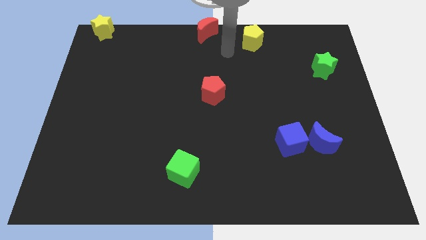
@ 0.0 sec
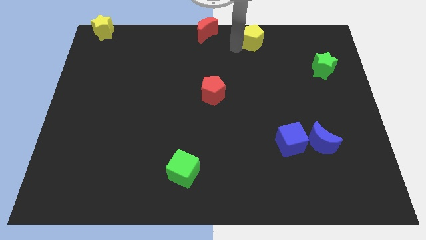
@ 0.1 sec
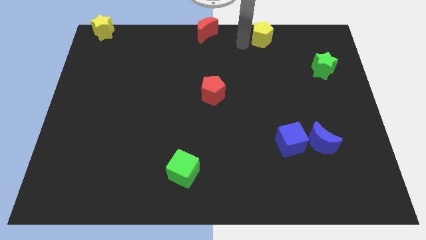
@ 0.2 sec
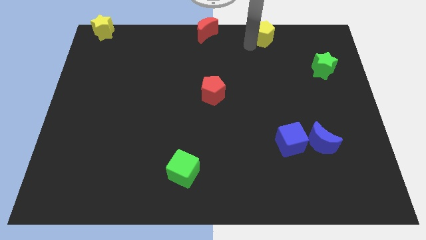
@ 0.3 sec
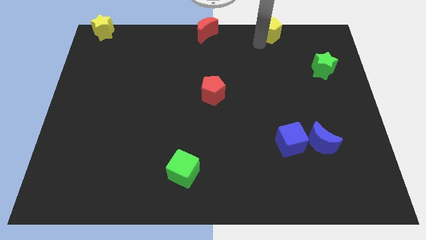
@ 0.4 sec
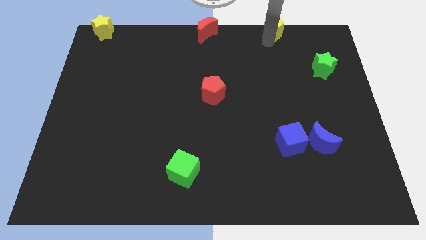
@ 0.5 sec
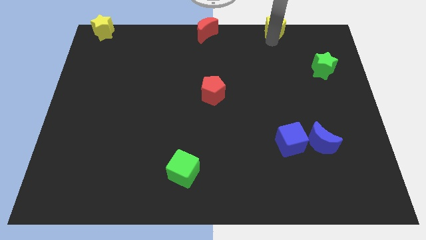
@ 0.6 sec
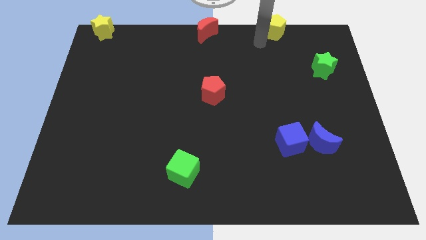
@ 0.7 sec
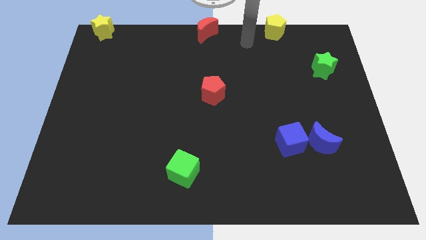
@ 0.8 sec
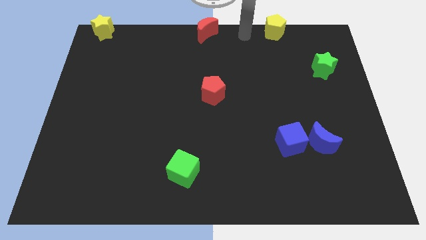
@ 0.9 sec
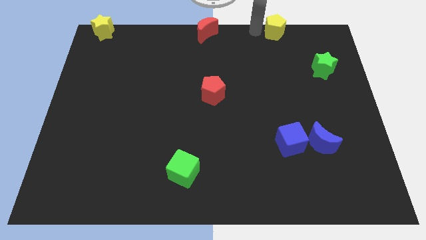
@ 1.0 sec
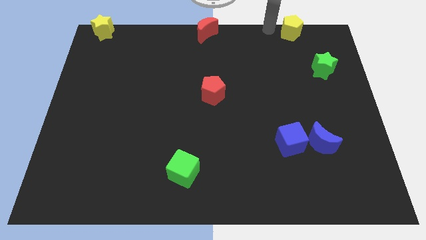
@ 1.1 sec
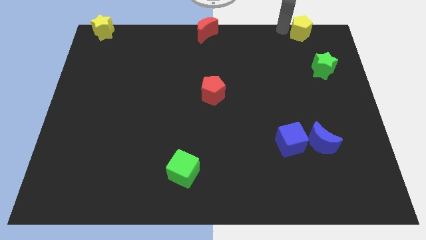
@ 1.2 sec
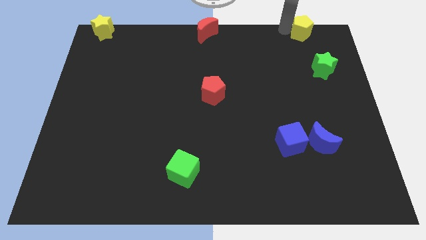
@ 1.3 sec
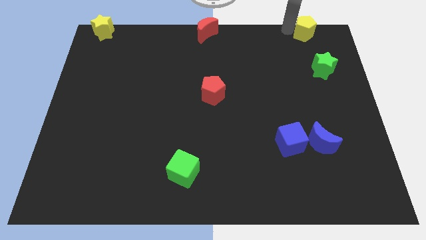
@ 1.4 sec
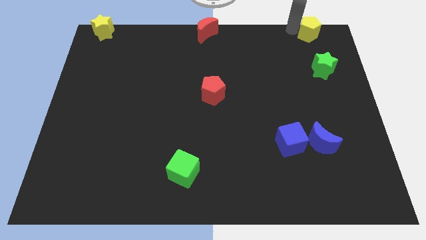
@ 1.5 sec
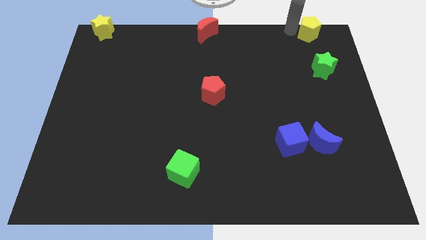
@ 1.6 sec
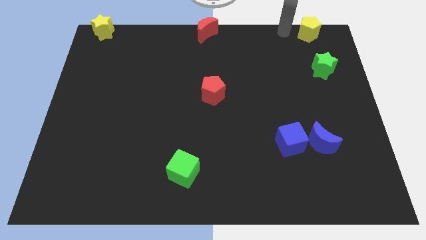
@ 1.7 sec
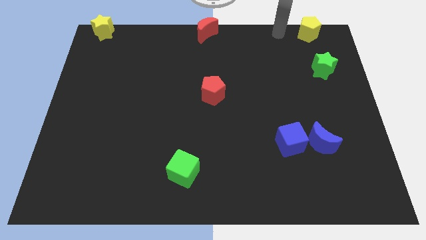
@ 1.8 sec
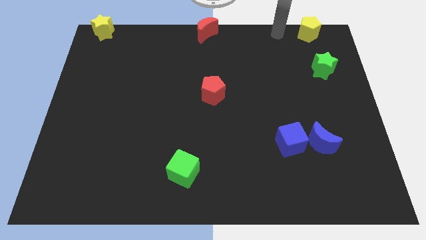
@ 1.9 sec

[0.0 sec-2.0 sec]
place the yellow pentagon on top of green star

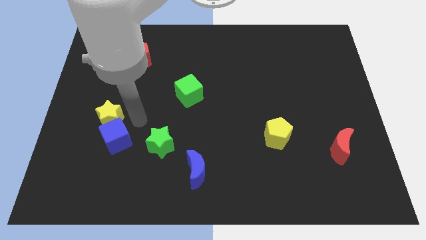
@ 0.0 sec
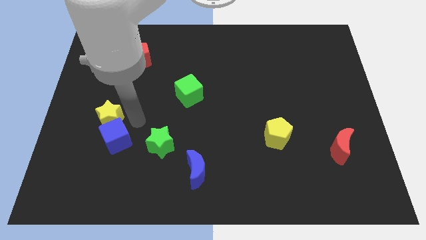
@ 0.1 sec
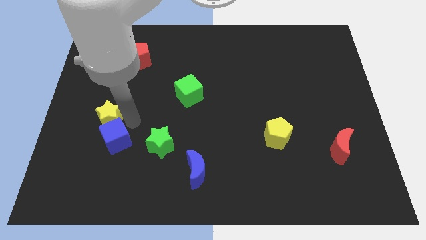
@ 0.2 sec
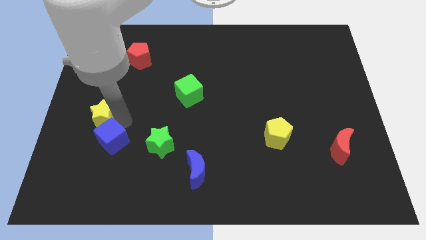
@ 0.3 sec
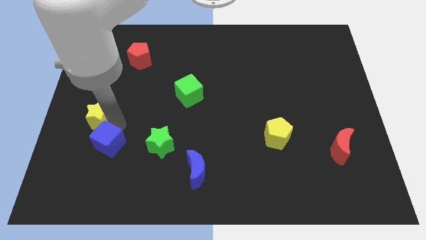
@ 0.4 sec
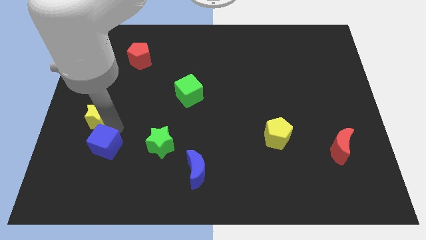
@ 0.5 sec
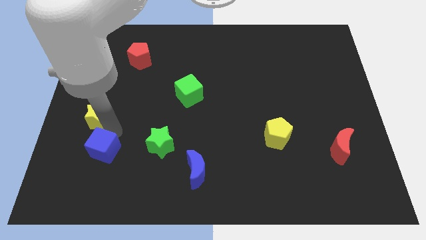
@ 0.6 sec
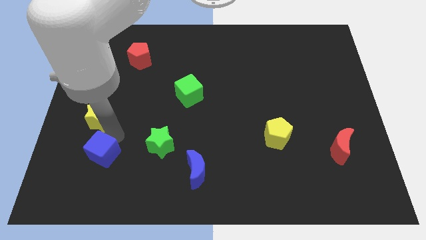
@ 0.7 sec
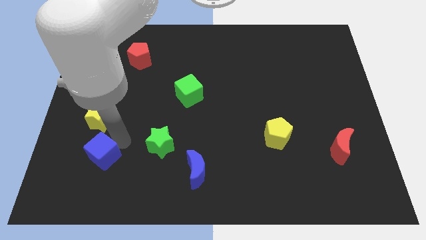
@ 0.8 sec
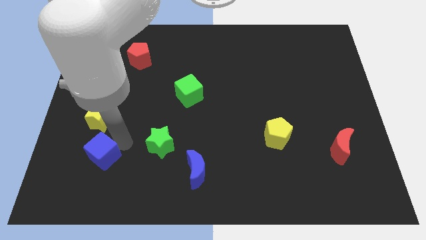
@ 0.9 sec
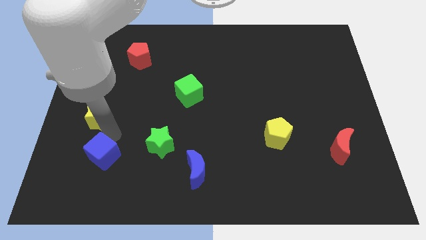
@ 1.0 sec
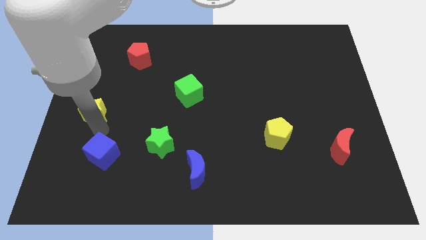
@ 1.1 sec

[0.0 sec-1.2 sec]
move the blue cube away from the yellow star

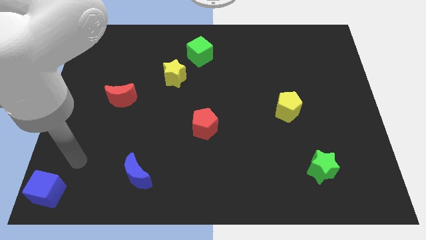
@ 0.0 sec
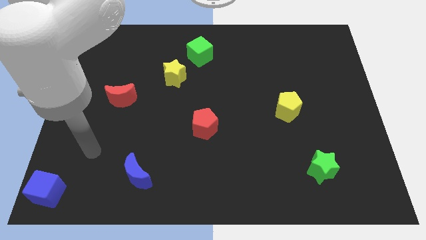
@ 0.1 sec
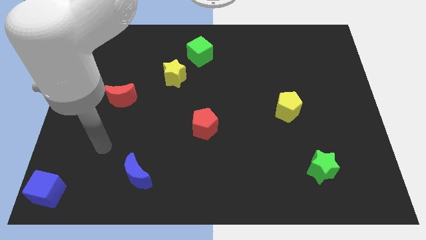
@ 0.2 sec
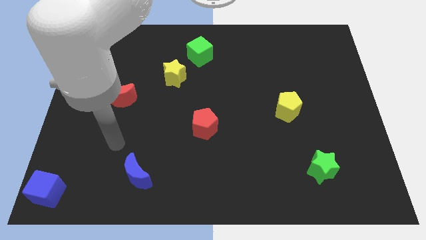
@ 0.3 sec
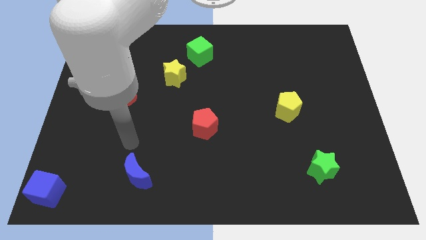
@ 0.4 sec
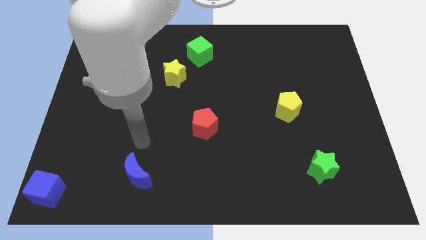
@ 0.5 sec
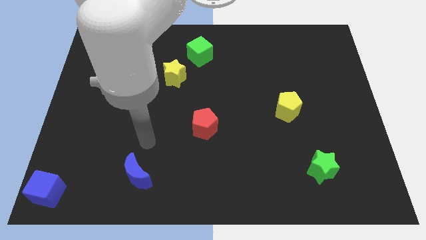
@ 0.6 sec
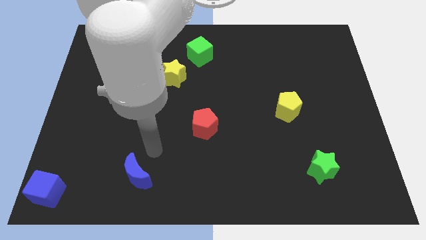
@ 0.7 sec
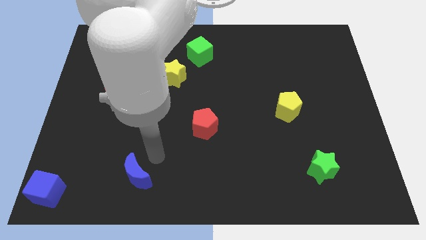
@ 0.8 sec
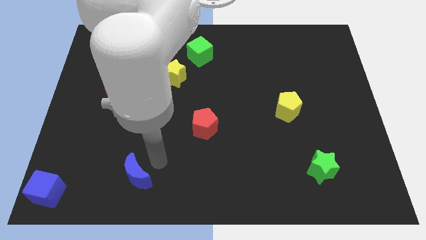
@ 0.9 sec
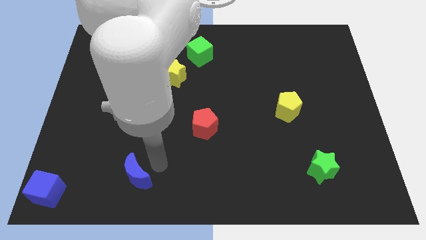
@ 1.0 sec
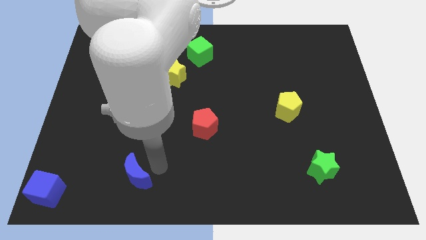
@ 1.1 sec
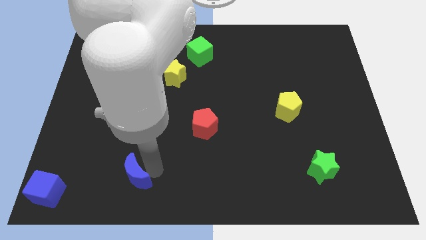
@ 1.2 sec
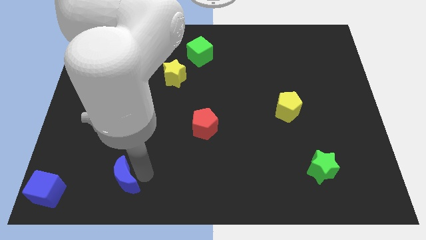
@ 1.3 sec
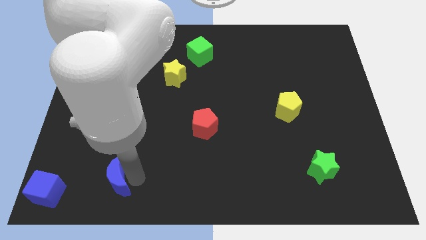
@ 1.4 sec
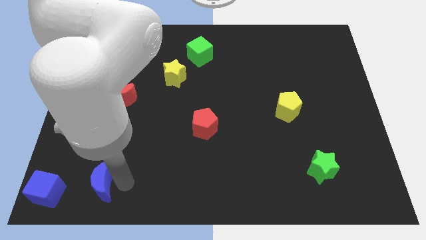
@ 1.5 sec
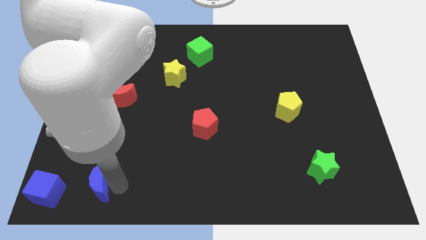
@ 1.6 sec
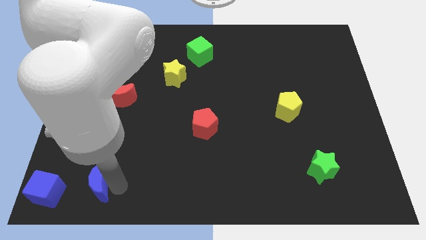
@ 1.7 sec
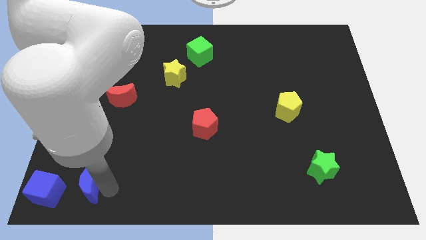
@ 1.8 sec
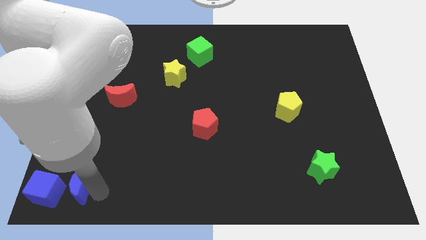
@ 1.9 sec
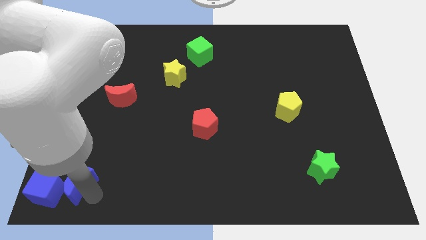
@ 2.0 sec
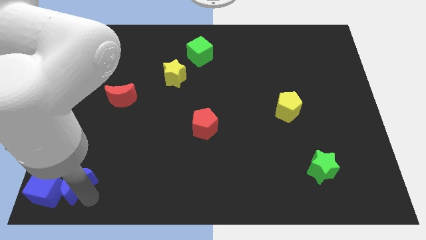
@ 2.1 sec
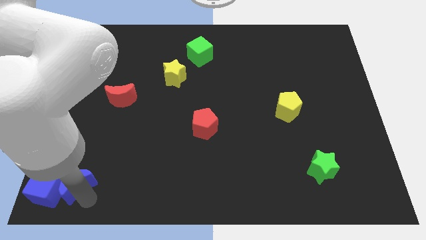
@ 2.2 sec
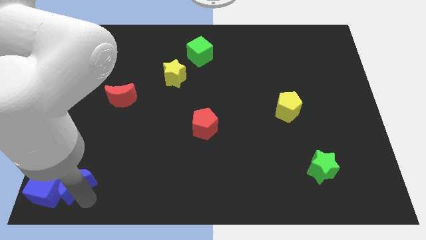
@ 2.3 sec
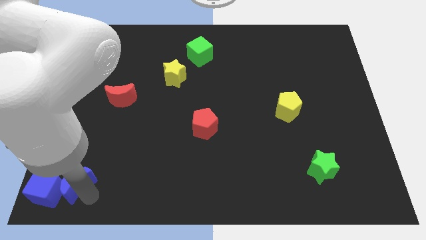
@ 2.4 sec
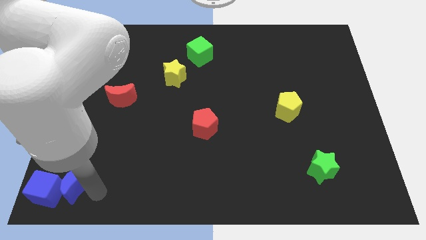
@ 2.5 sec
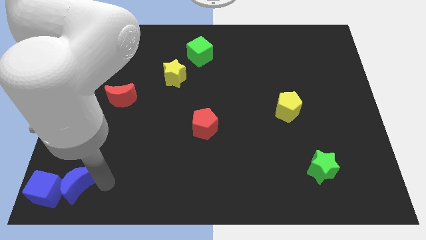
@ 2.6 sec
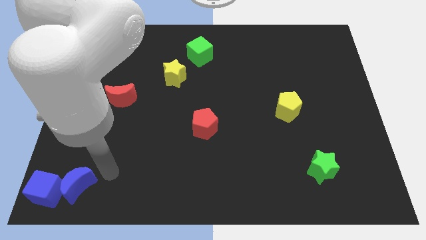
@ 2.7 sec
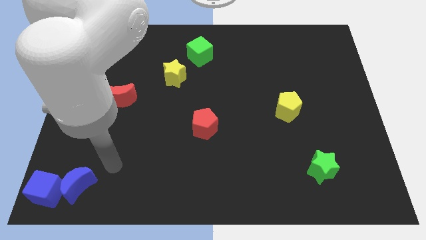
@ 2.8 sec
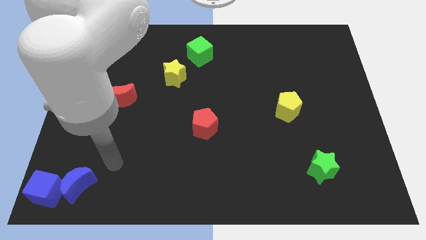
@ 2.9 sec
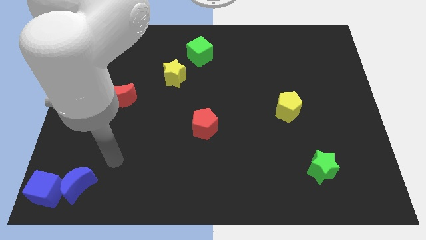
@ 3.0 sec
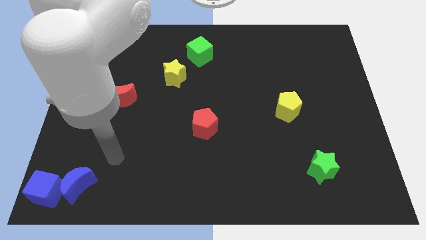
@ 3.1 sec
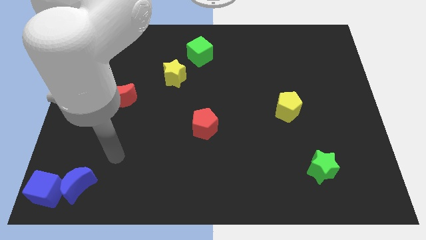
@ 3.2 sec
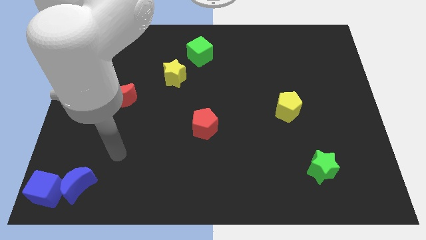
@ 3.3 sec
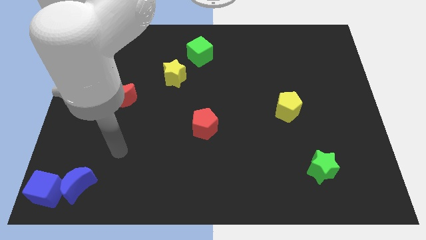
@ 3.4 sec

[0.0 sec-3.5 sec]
slide the blue moon to the right of the blue moon

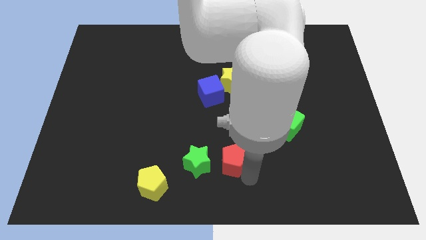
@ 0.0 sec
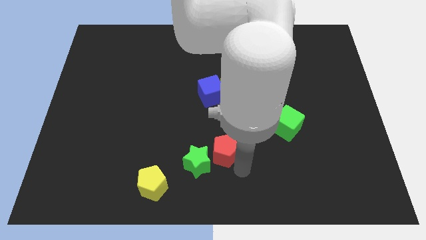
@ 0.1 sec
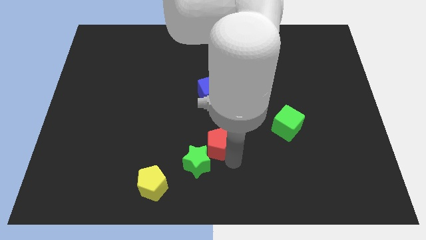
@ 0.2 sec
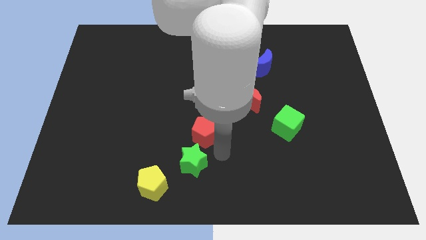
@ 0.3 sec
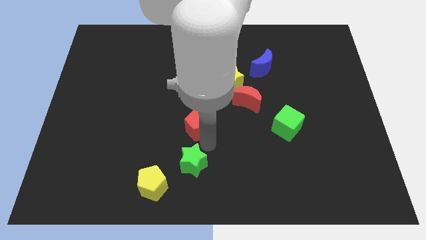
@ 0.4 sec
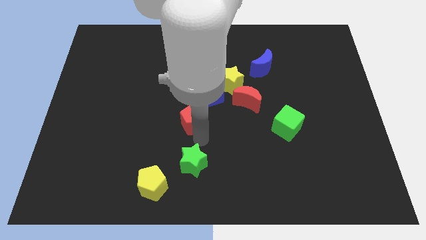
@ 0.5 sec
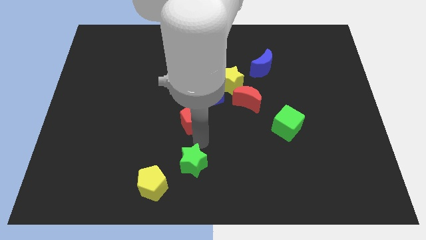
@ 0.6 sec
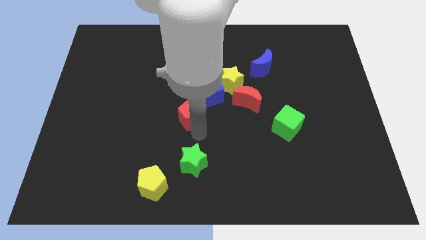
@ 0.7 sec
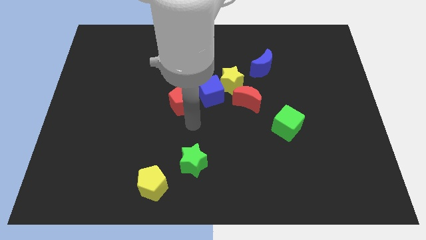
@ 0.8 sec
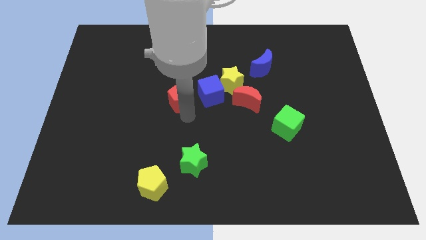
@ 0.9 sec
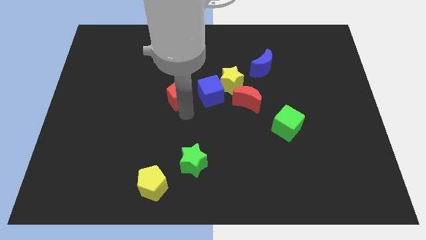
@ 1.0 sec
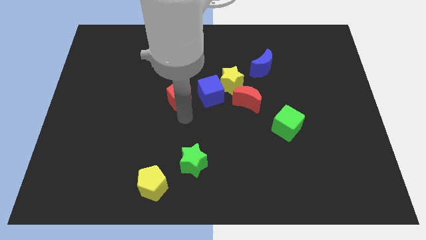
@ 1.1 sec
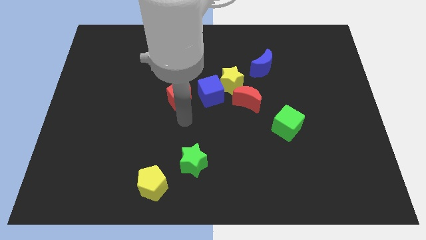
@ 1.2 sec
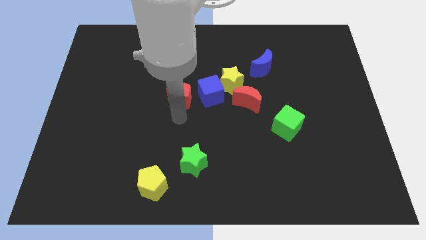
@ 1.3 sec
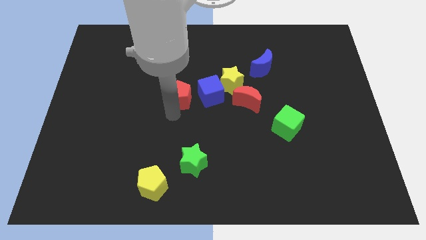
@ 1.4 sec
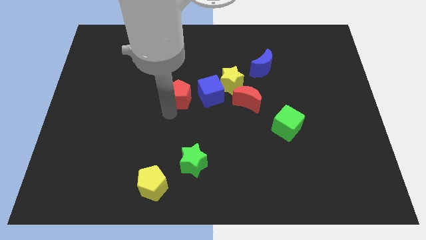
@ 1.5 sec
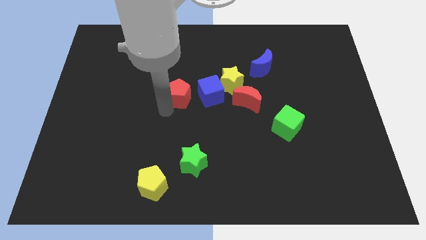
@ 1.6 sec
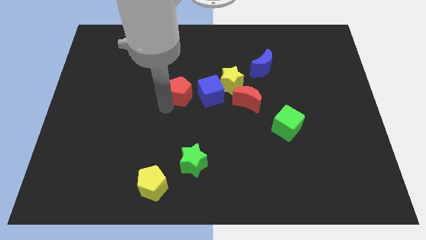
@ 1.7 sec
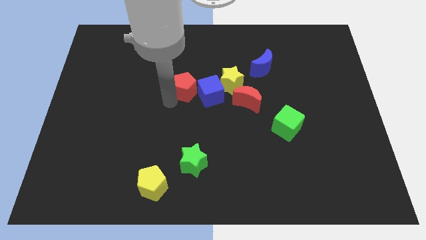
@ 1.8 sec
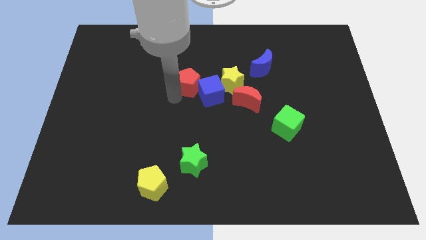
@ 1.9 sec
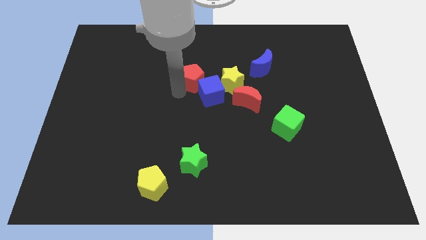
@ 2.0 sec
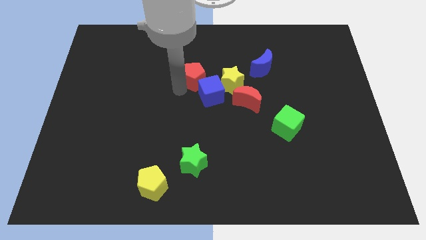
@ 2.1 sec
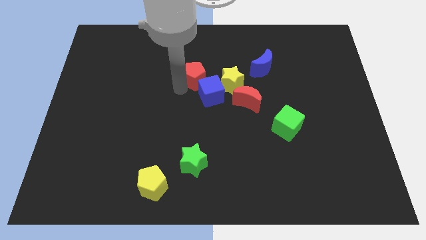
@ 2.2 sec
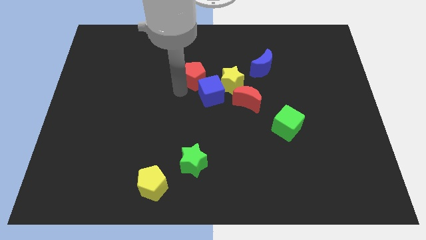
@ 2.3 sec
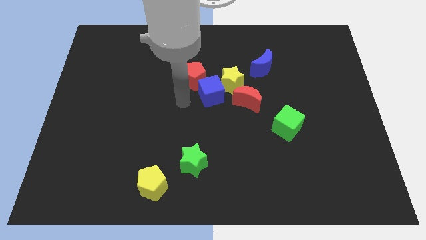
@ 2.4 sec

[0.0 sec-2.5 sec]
push the red pentagon to the top of the blue cube
